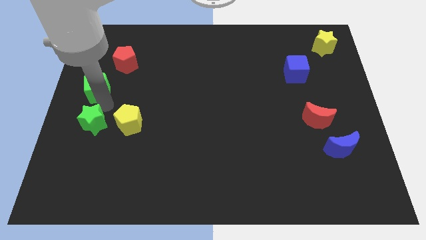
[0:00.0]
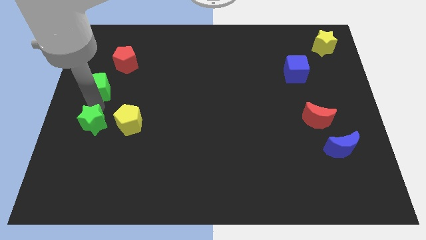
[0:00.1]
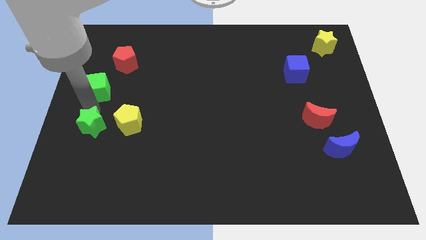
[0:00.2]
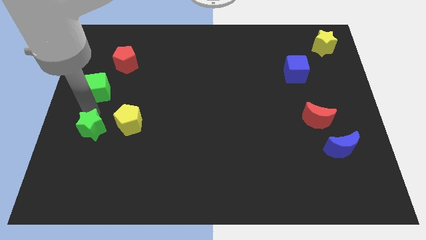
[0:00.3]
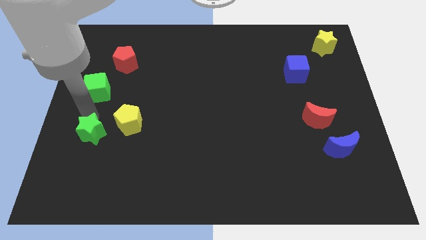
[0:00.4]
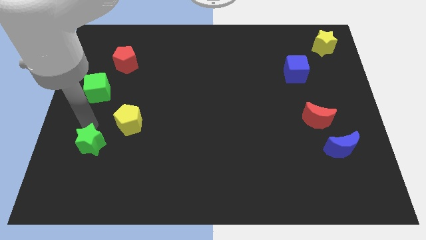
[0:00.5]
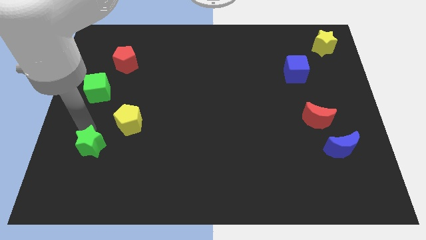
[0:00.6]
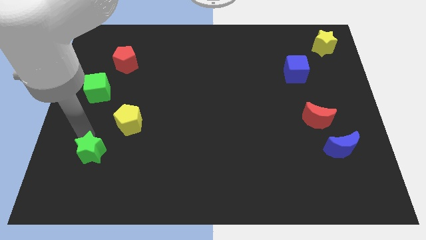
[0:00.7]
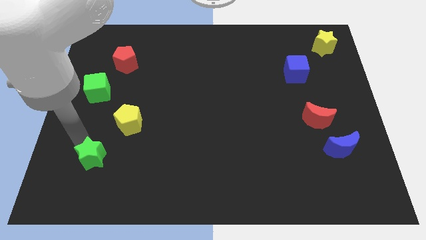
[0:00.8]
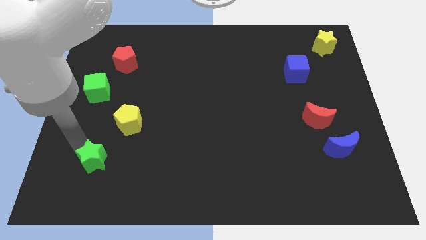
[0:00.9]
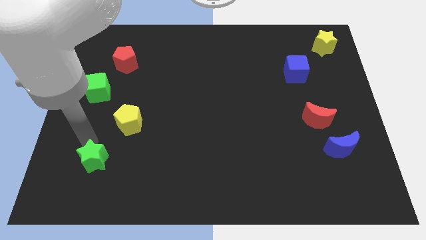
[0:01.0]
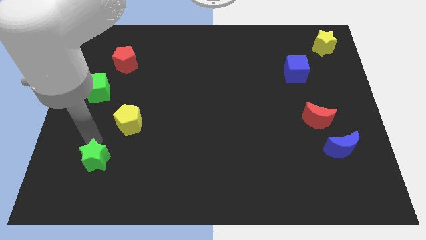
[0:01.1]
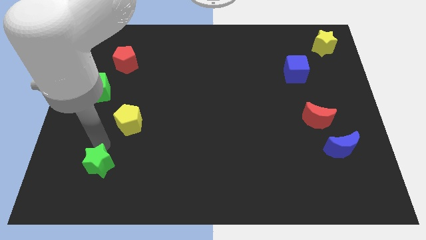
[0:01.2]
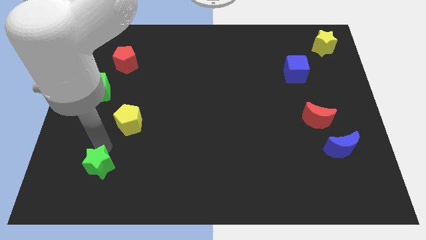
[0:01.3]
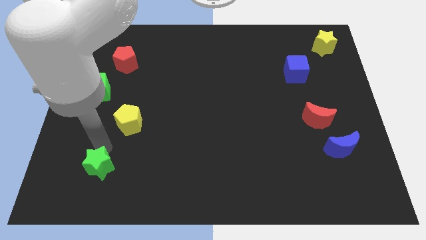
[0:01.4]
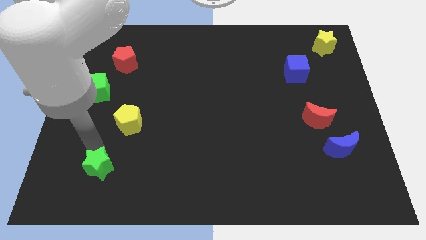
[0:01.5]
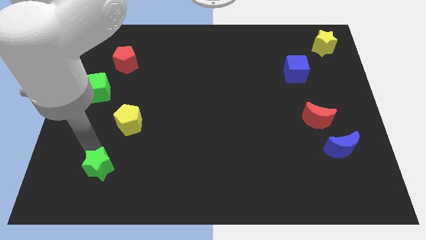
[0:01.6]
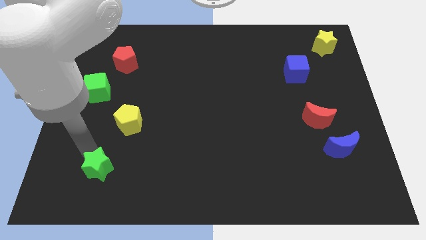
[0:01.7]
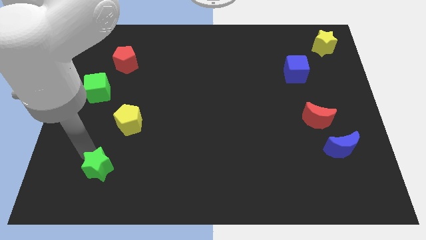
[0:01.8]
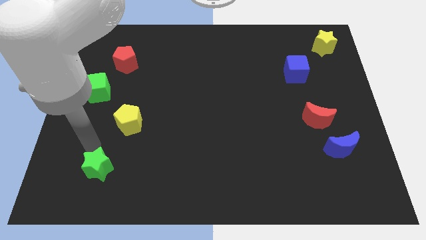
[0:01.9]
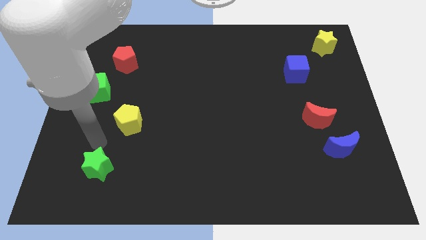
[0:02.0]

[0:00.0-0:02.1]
slide the green star to the bottom side

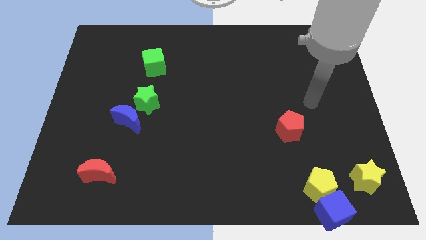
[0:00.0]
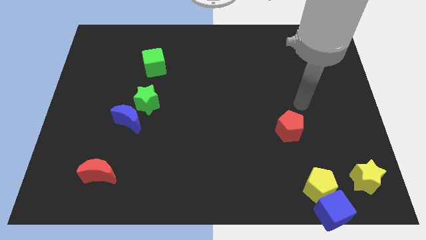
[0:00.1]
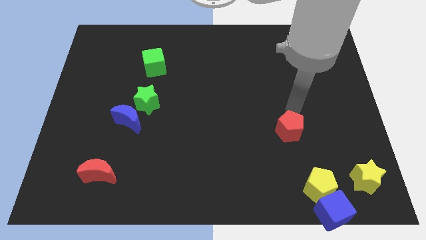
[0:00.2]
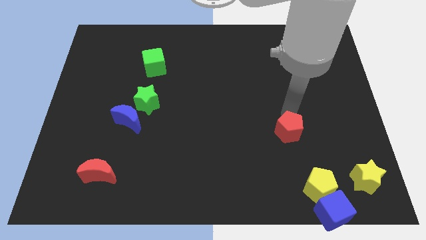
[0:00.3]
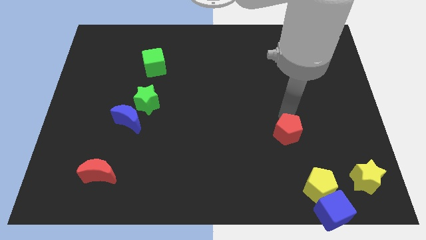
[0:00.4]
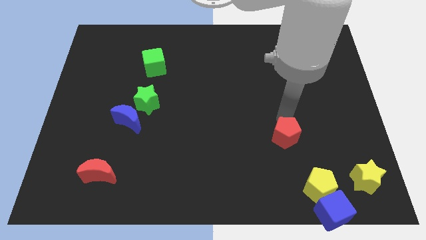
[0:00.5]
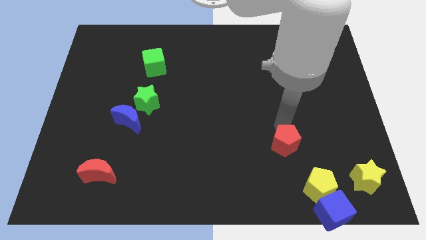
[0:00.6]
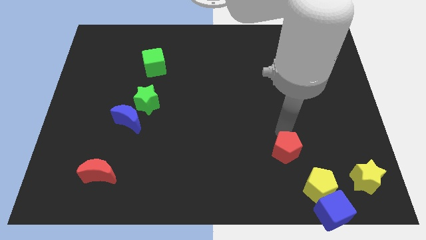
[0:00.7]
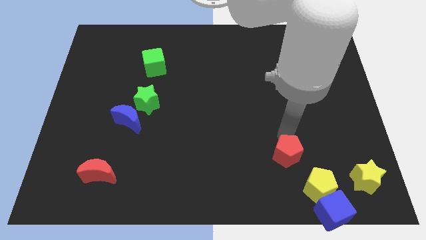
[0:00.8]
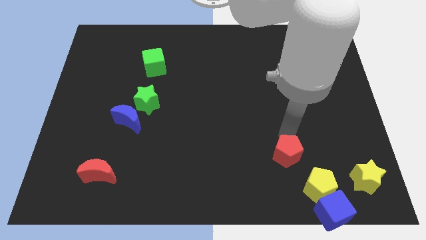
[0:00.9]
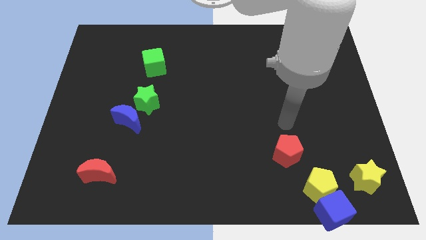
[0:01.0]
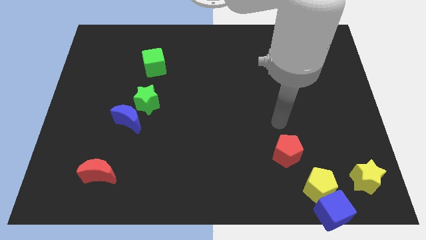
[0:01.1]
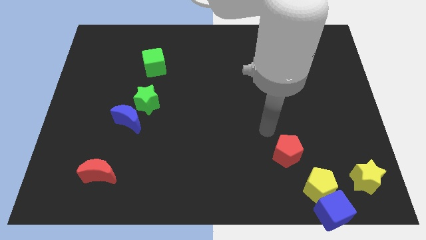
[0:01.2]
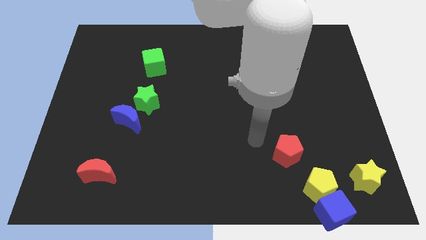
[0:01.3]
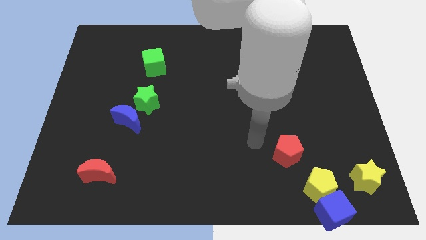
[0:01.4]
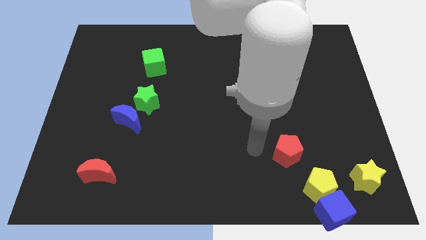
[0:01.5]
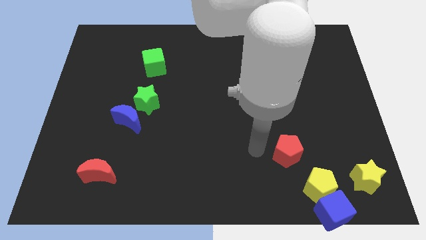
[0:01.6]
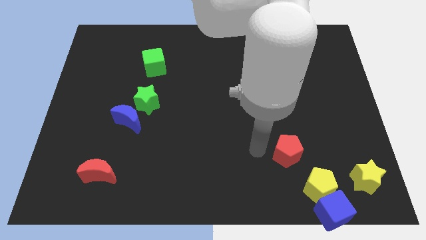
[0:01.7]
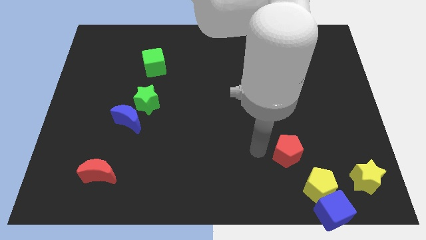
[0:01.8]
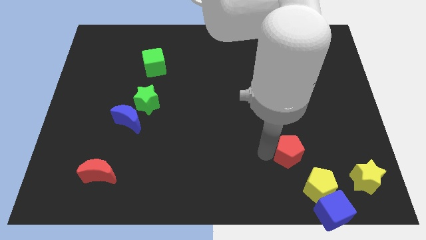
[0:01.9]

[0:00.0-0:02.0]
drag the red pentagon to the top left side of the yellow pentagon

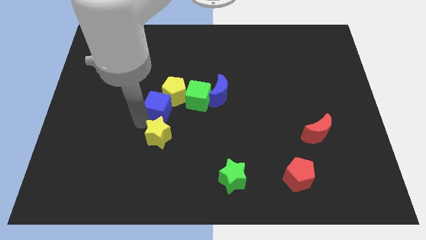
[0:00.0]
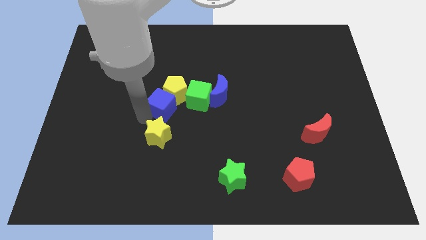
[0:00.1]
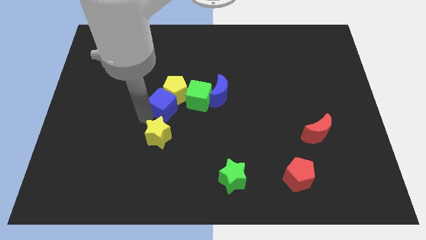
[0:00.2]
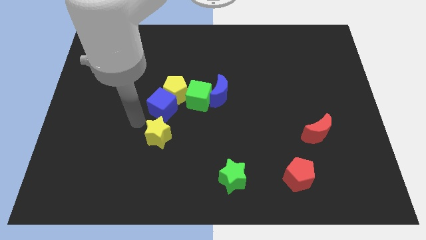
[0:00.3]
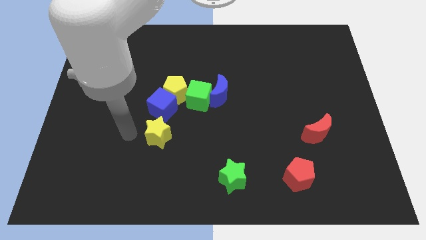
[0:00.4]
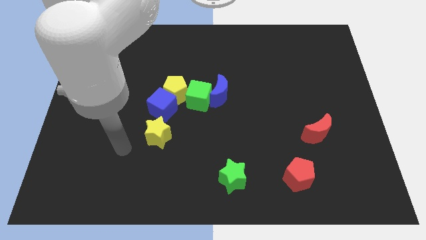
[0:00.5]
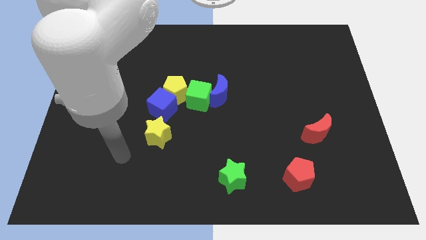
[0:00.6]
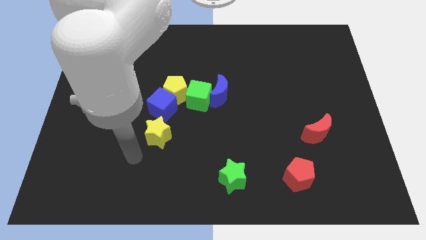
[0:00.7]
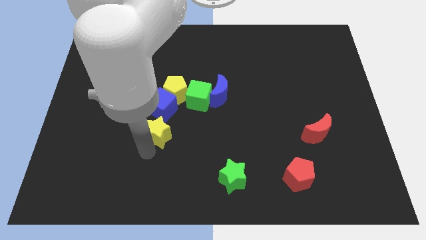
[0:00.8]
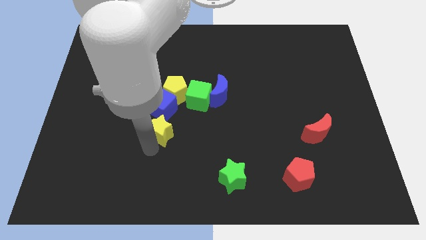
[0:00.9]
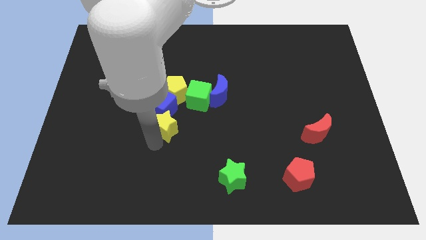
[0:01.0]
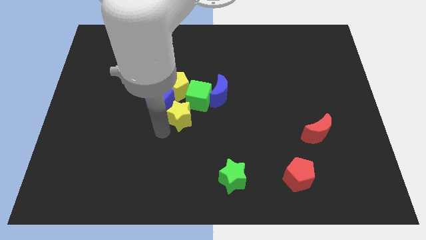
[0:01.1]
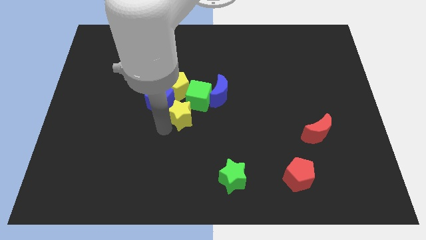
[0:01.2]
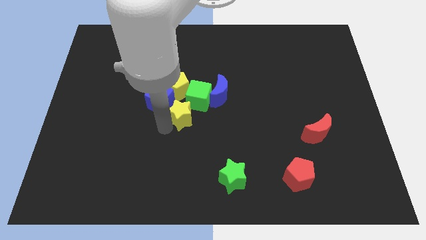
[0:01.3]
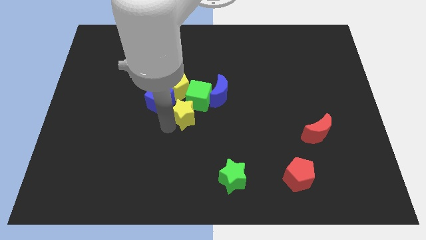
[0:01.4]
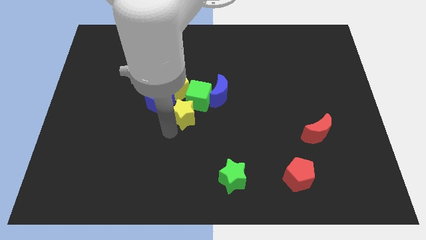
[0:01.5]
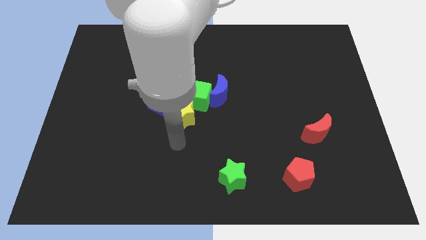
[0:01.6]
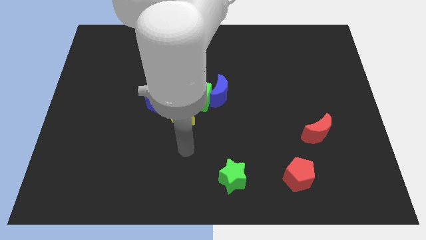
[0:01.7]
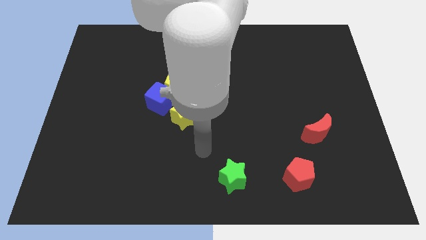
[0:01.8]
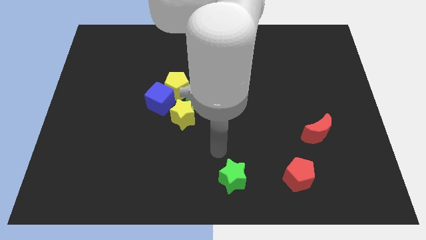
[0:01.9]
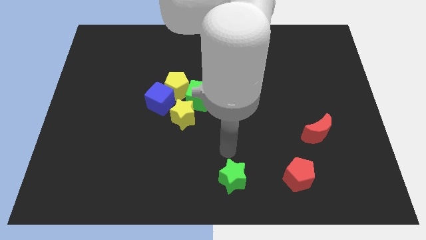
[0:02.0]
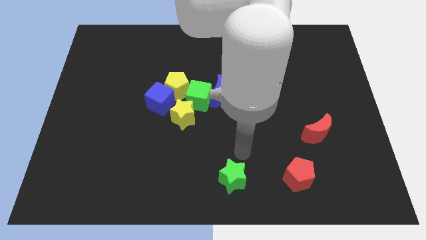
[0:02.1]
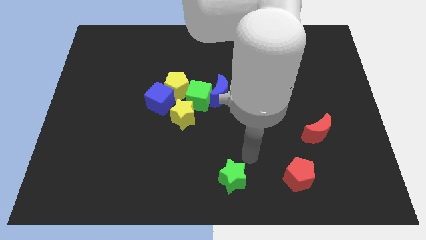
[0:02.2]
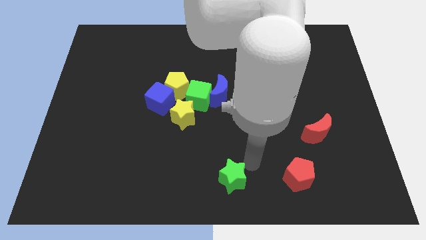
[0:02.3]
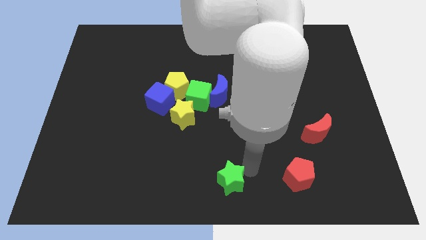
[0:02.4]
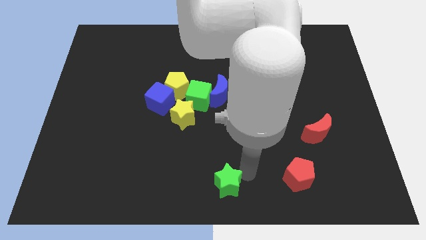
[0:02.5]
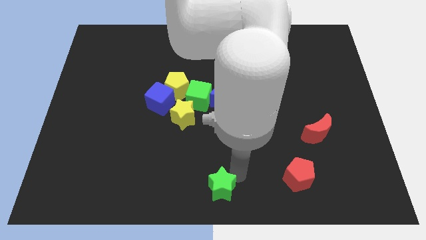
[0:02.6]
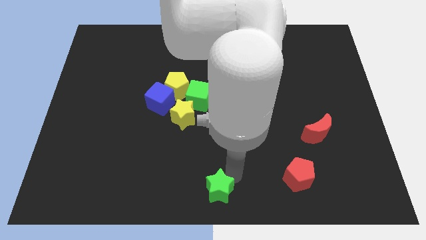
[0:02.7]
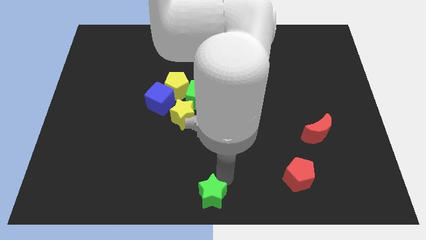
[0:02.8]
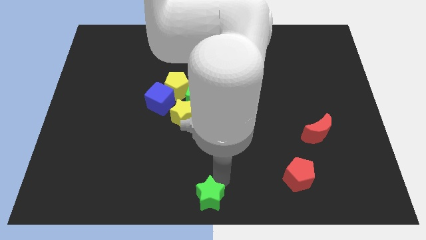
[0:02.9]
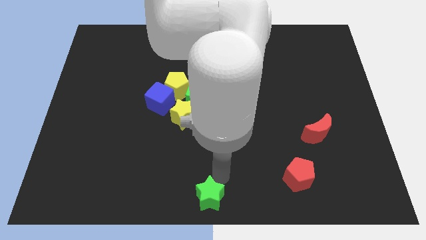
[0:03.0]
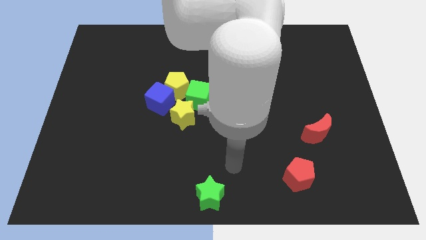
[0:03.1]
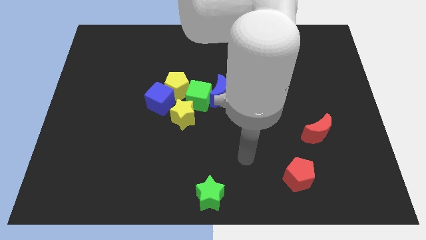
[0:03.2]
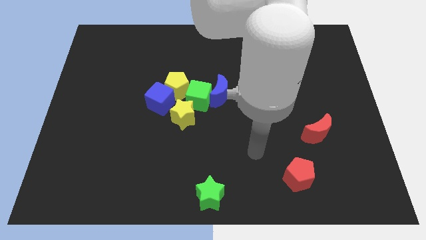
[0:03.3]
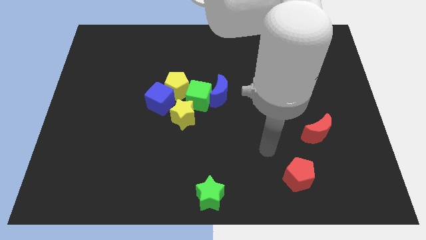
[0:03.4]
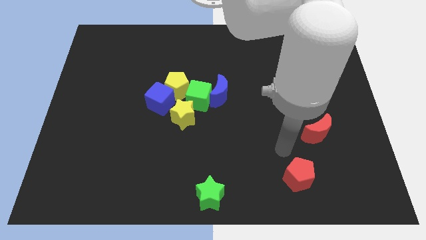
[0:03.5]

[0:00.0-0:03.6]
adjust the yellow star diagonal to the green cube

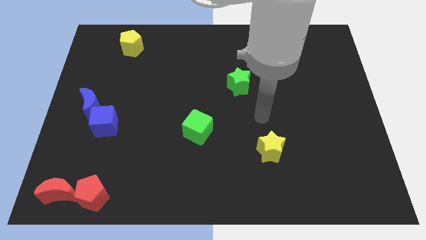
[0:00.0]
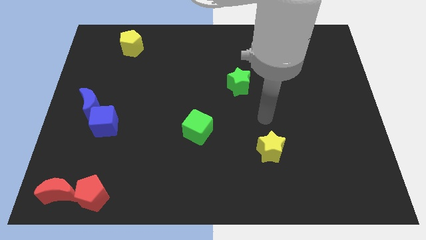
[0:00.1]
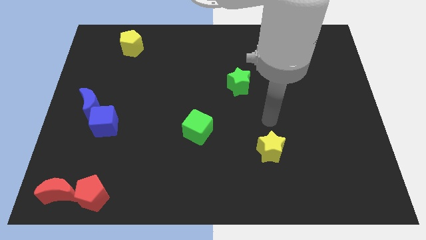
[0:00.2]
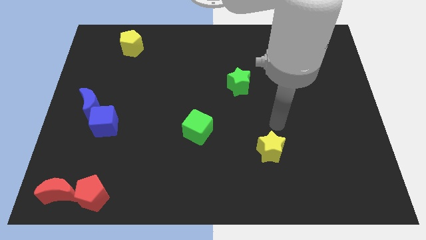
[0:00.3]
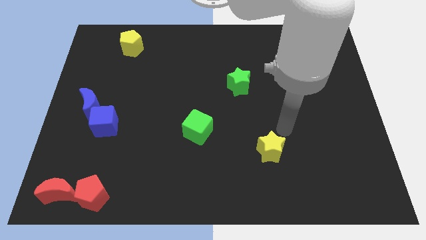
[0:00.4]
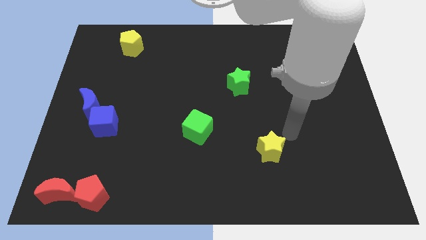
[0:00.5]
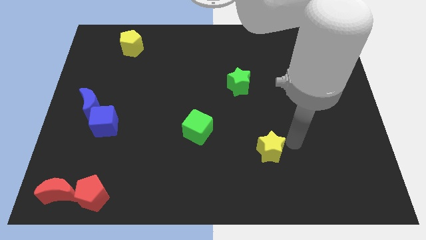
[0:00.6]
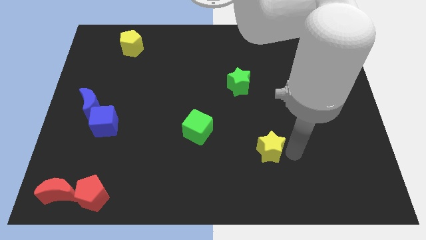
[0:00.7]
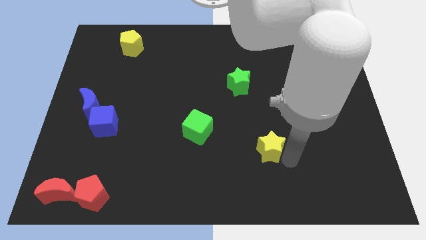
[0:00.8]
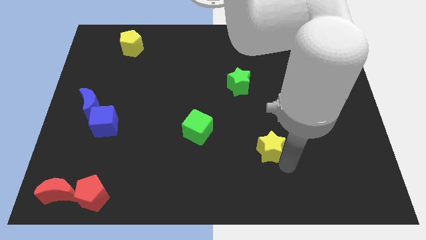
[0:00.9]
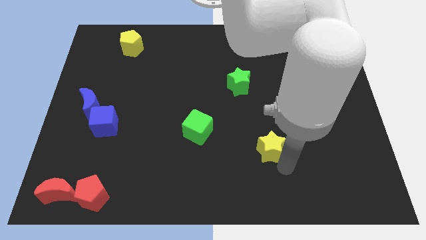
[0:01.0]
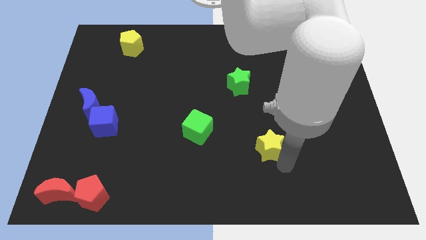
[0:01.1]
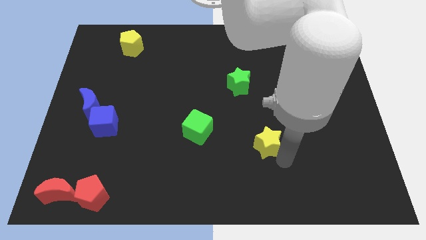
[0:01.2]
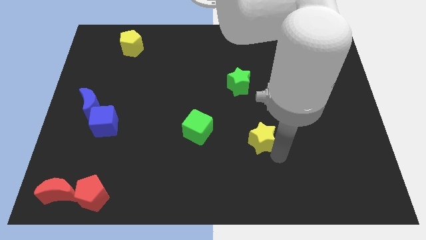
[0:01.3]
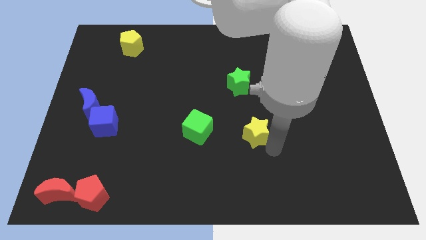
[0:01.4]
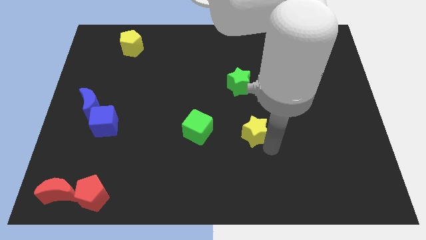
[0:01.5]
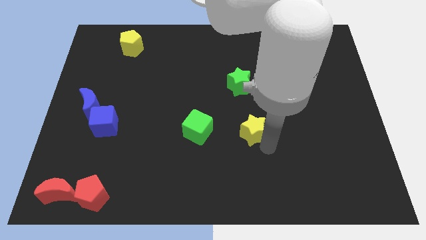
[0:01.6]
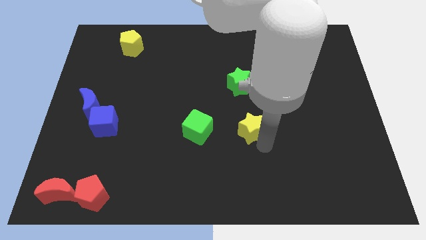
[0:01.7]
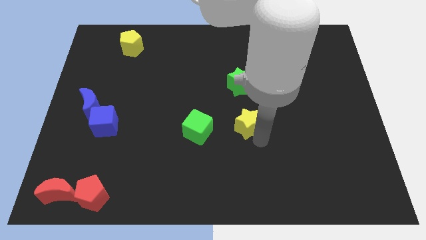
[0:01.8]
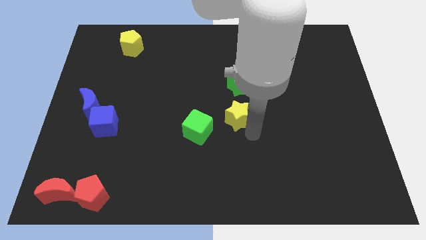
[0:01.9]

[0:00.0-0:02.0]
push yellow star below green star
